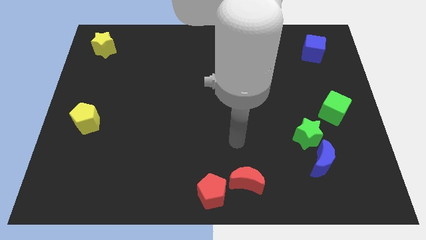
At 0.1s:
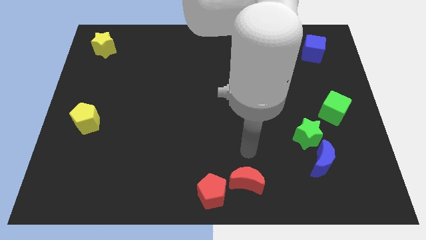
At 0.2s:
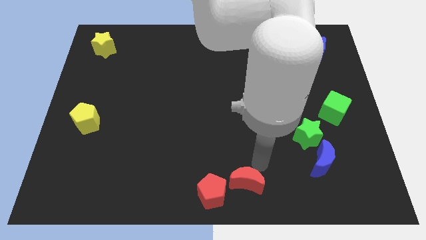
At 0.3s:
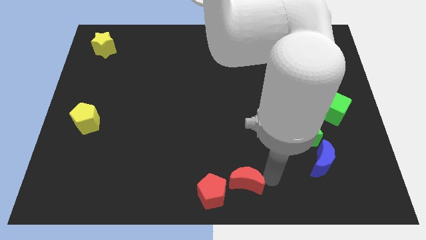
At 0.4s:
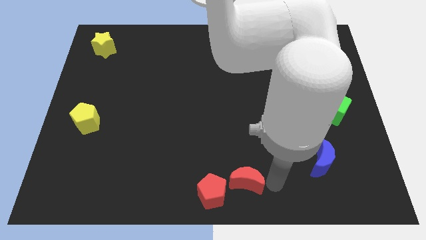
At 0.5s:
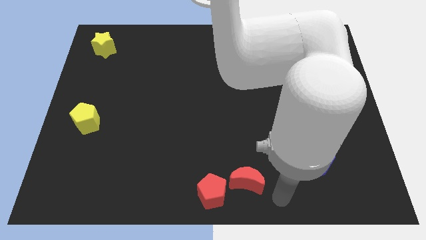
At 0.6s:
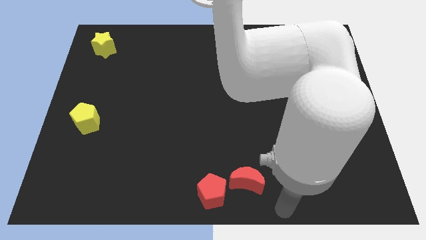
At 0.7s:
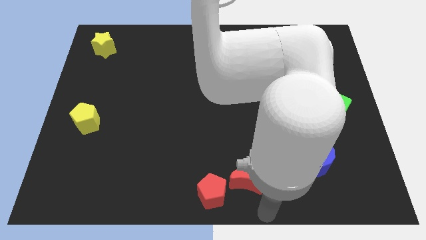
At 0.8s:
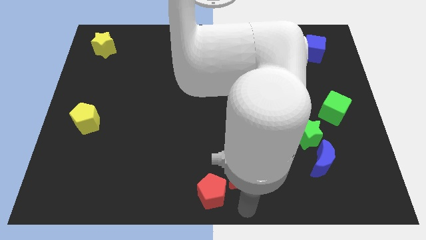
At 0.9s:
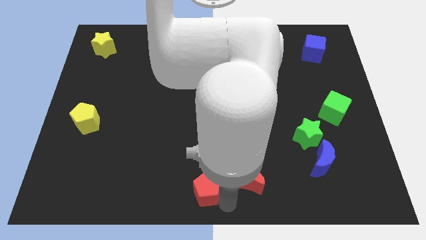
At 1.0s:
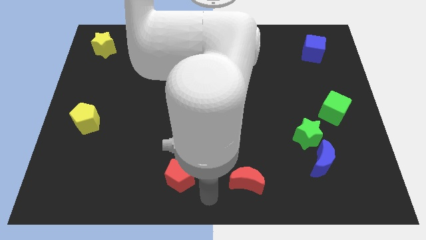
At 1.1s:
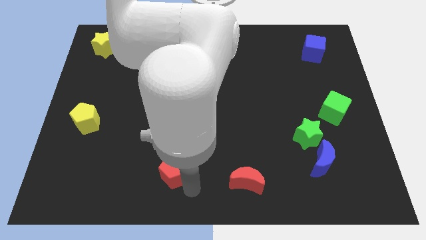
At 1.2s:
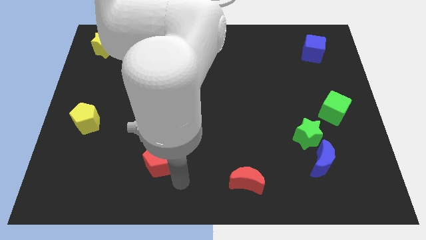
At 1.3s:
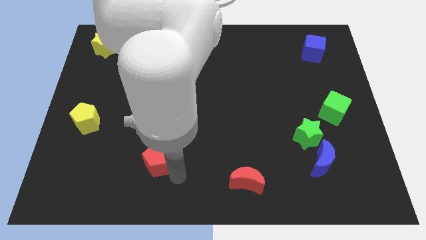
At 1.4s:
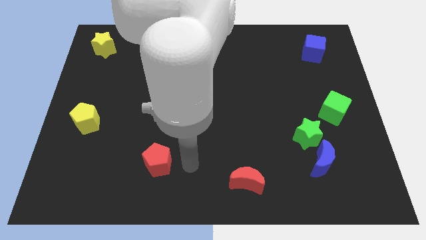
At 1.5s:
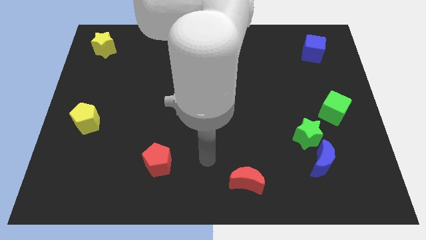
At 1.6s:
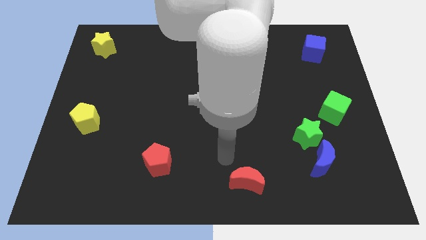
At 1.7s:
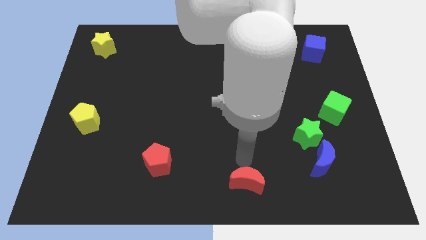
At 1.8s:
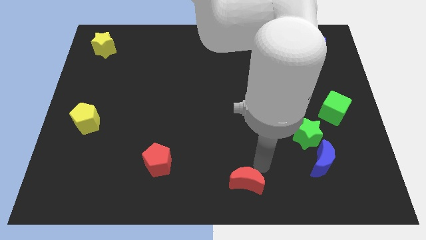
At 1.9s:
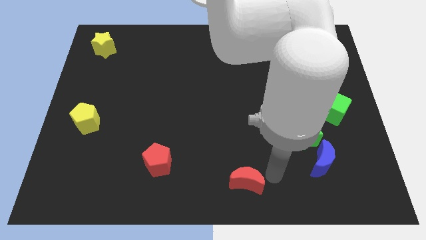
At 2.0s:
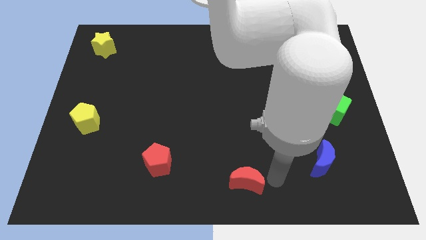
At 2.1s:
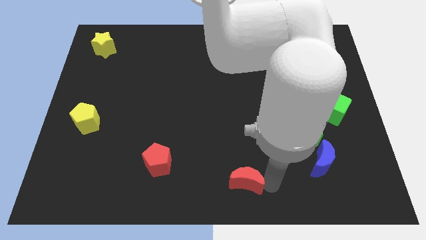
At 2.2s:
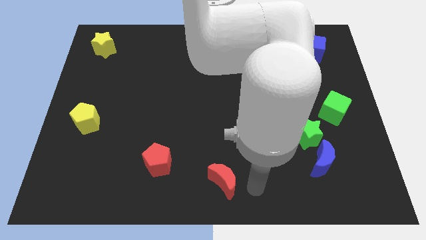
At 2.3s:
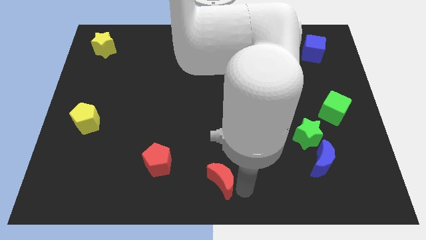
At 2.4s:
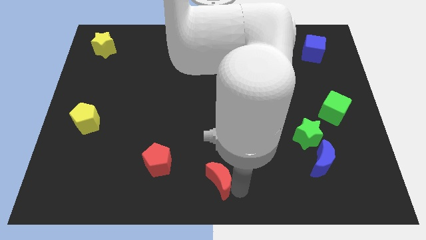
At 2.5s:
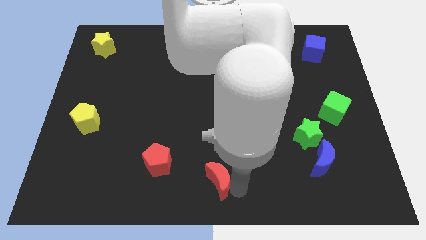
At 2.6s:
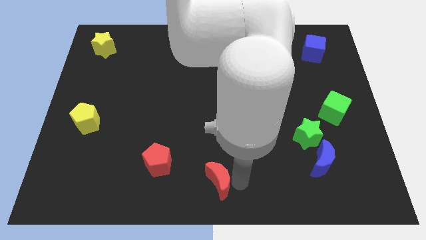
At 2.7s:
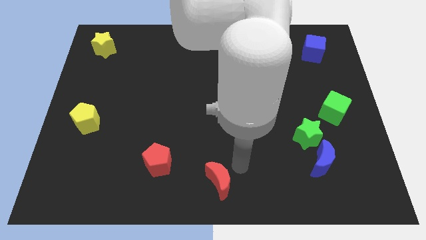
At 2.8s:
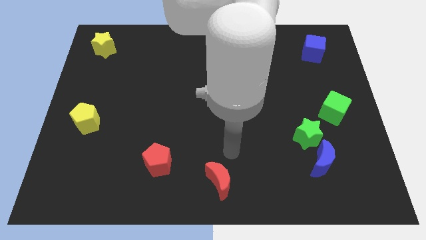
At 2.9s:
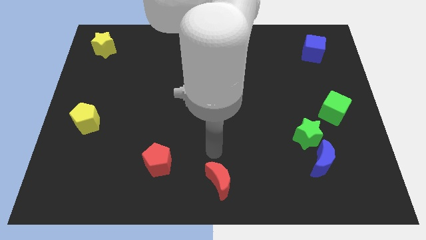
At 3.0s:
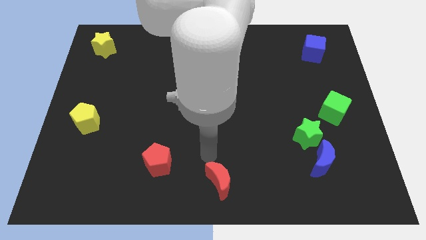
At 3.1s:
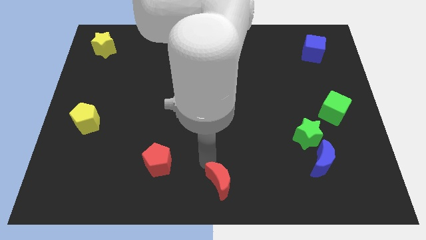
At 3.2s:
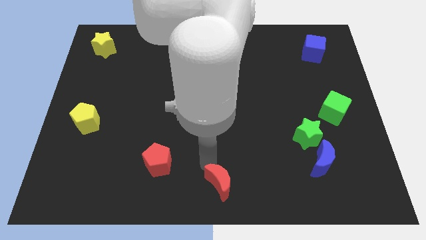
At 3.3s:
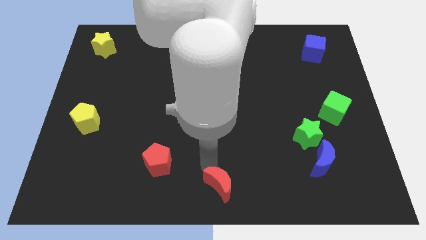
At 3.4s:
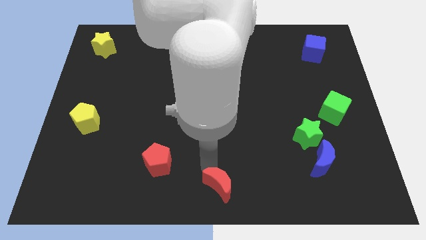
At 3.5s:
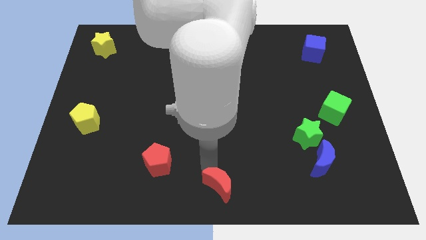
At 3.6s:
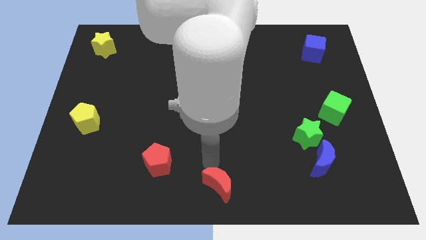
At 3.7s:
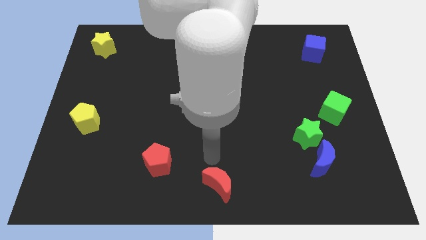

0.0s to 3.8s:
push the red pentagon and red crescent towards the left side of the board

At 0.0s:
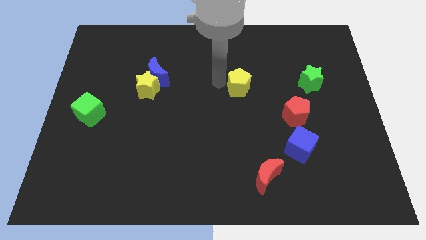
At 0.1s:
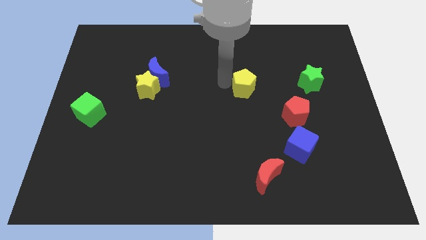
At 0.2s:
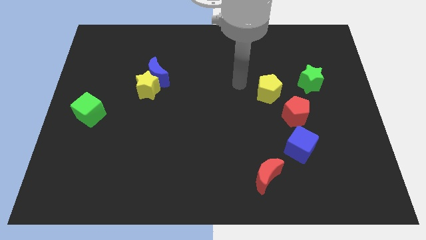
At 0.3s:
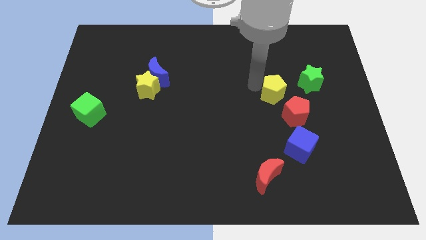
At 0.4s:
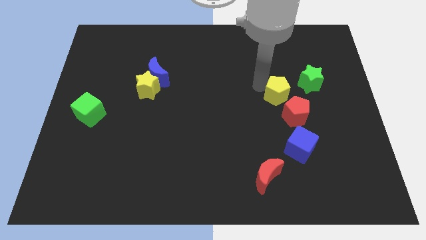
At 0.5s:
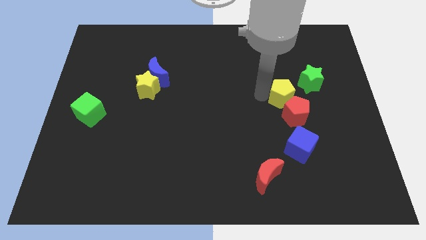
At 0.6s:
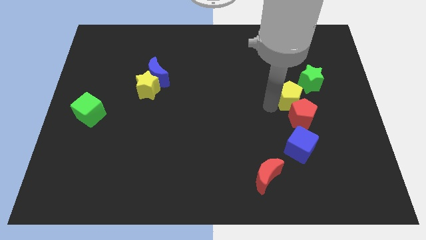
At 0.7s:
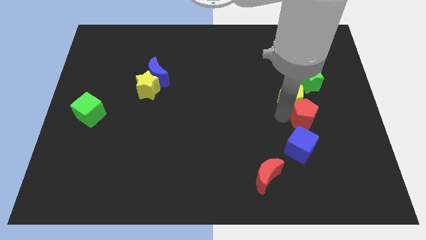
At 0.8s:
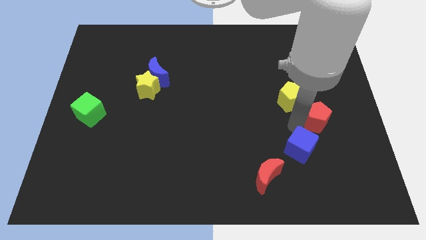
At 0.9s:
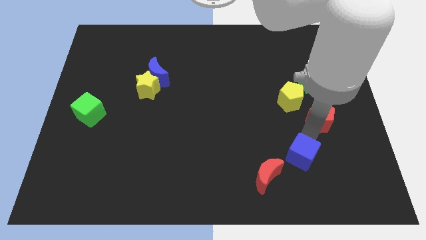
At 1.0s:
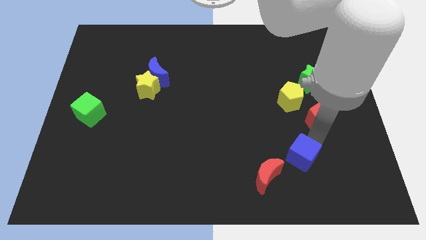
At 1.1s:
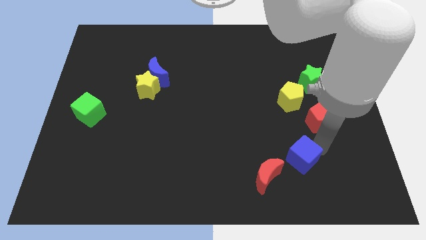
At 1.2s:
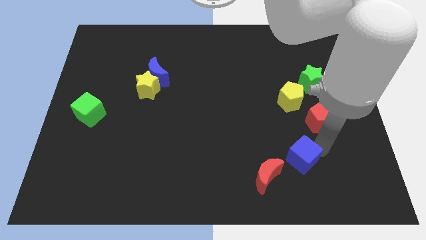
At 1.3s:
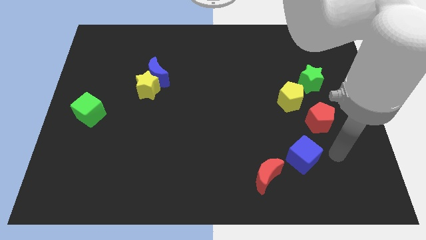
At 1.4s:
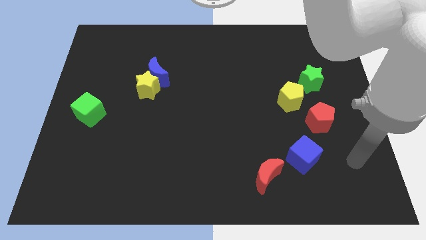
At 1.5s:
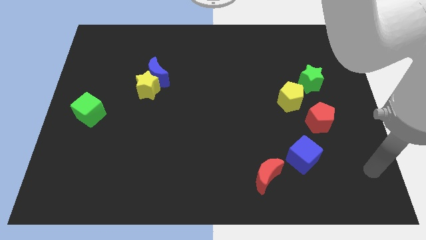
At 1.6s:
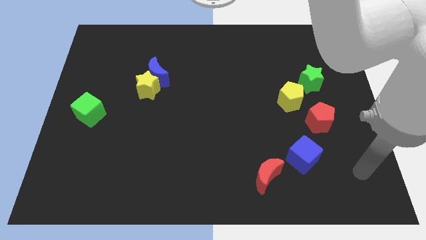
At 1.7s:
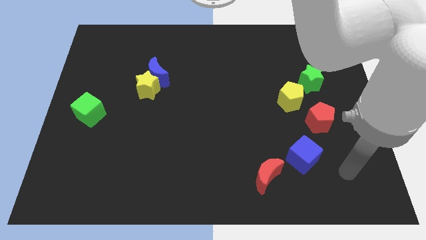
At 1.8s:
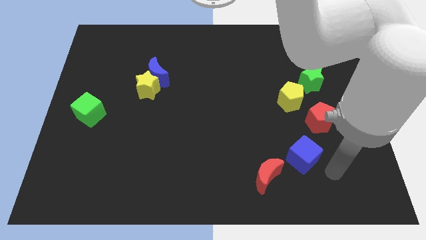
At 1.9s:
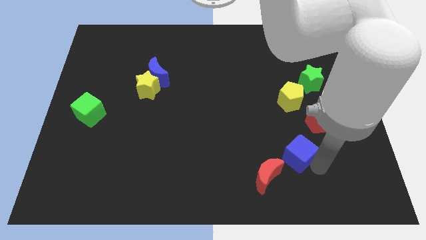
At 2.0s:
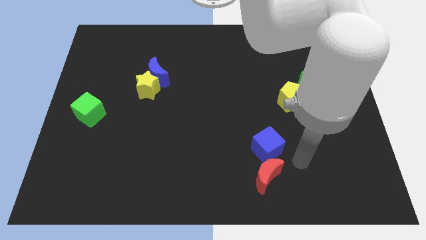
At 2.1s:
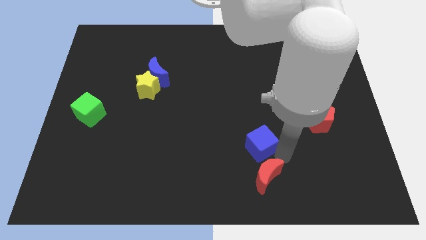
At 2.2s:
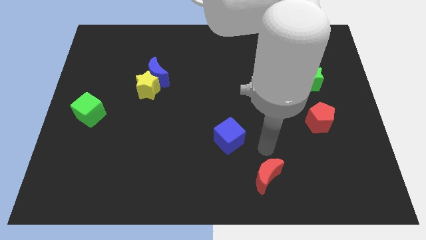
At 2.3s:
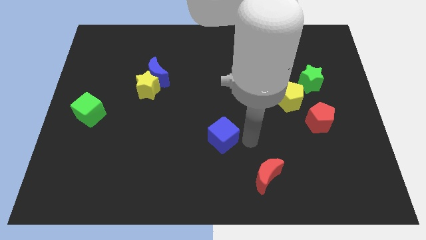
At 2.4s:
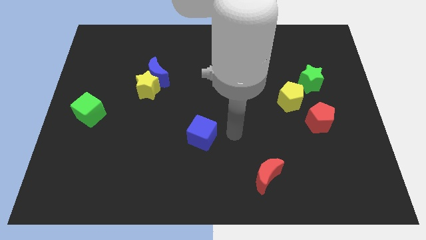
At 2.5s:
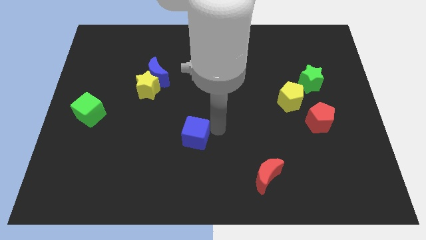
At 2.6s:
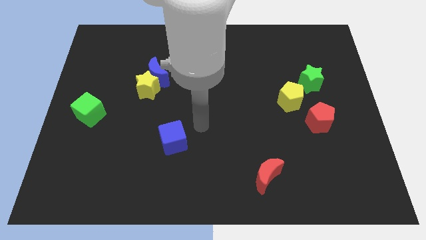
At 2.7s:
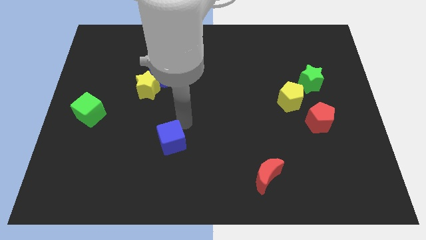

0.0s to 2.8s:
separate the red pentagon and blue cube

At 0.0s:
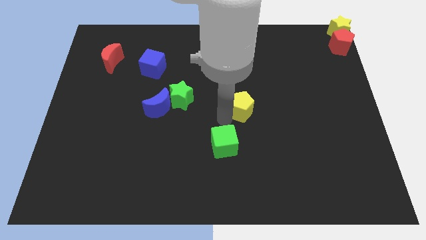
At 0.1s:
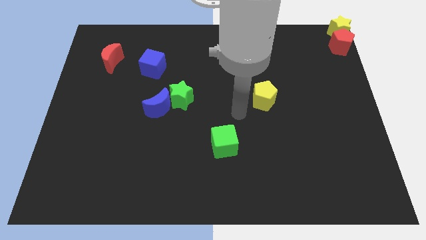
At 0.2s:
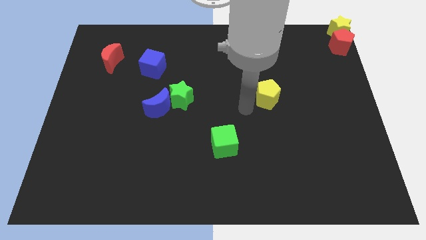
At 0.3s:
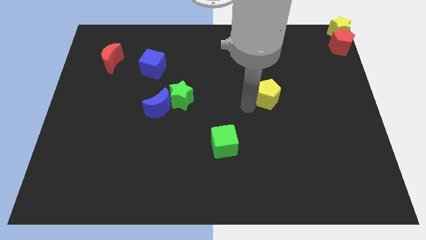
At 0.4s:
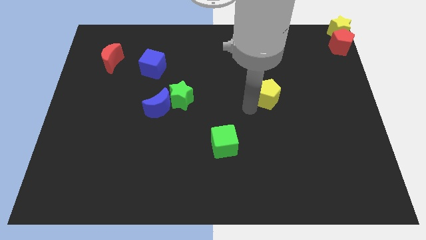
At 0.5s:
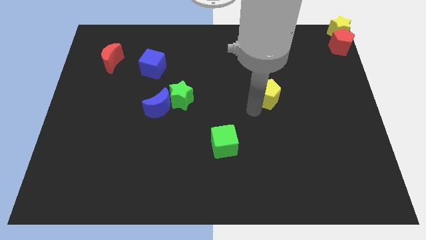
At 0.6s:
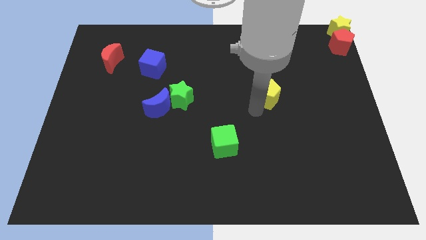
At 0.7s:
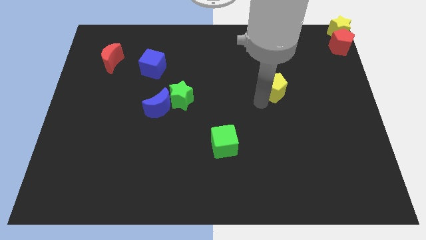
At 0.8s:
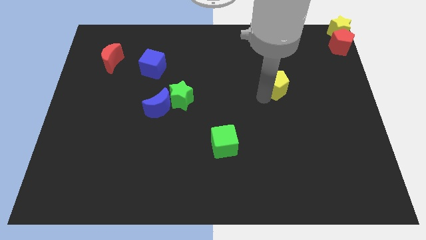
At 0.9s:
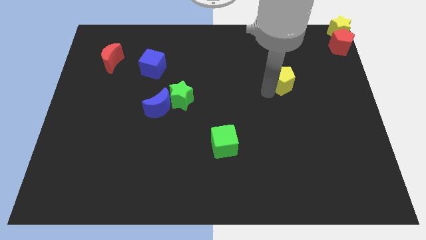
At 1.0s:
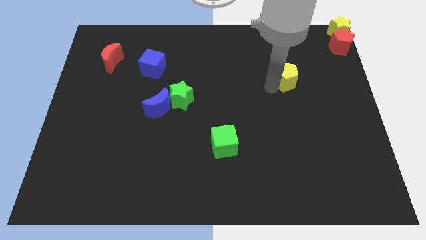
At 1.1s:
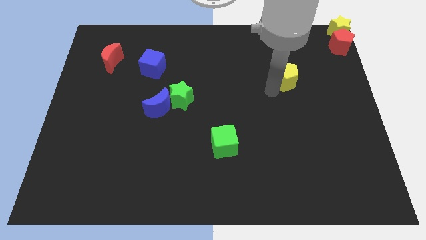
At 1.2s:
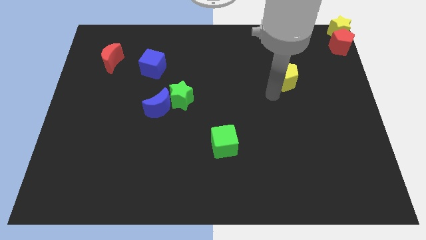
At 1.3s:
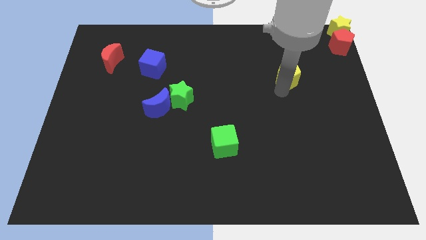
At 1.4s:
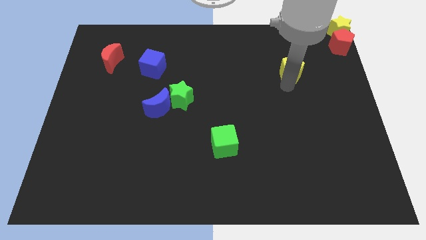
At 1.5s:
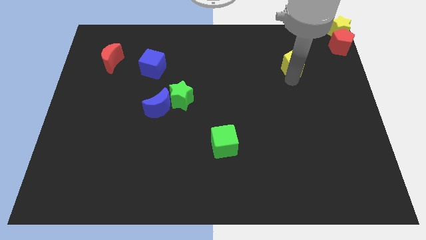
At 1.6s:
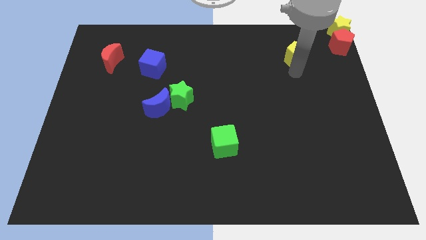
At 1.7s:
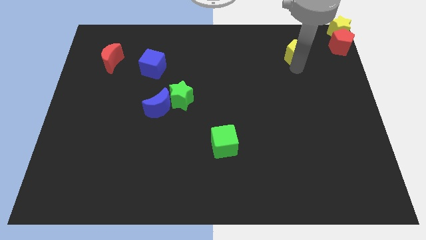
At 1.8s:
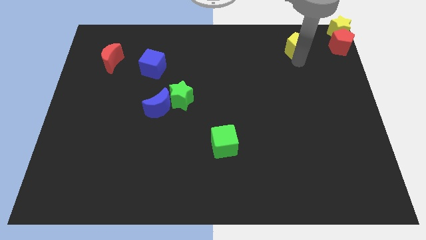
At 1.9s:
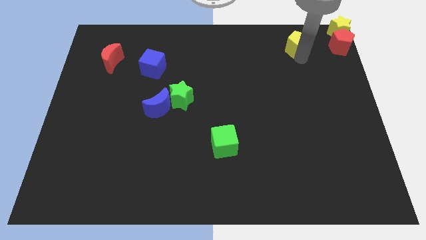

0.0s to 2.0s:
move the yellow pentagon to the left of the red pentagon

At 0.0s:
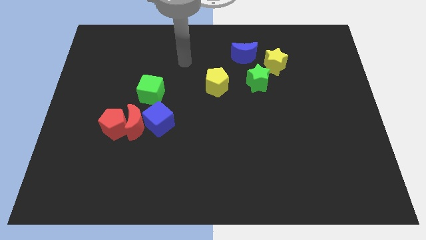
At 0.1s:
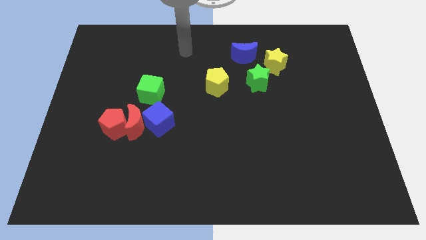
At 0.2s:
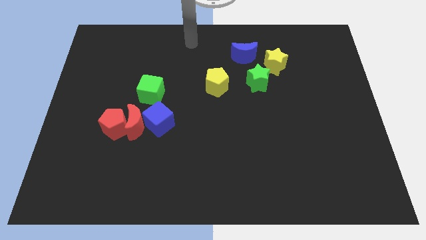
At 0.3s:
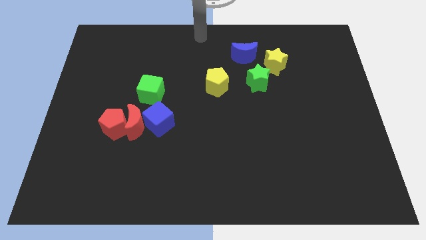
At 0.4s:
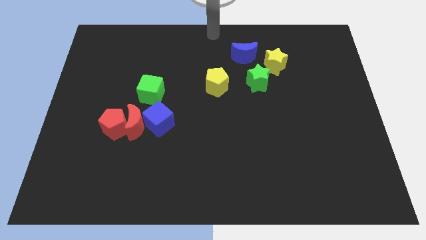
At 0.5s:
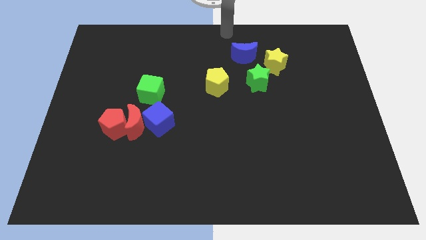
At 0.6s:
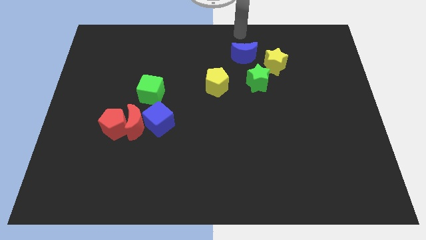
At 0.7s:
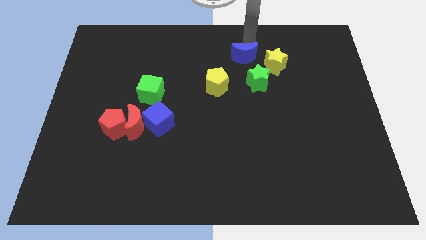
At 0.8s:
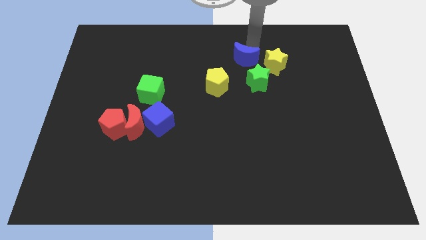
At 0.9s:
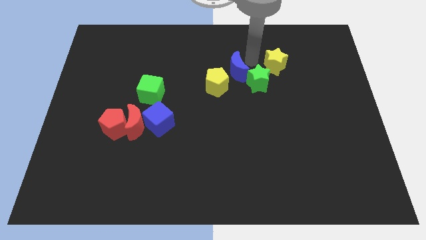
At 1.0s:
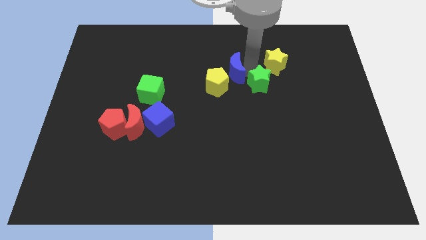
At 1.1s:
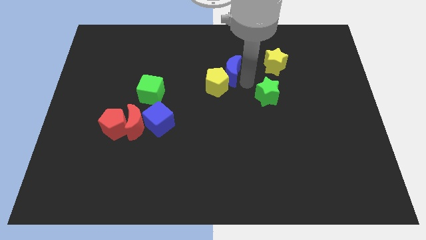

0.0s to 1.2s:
push blue crescent towards the yellow pentagon
